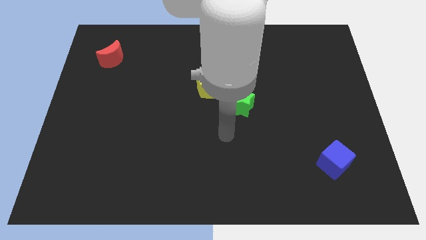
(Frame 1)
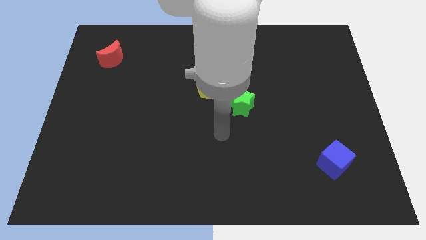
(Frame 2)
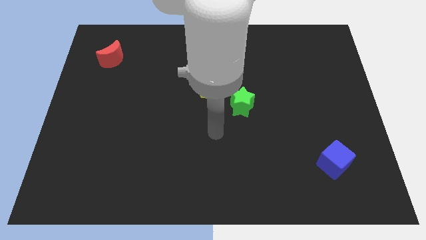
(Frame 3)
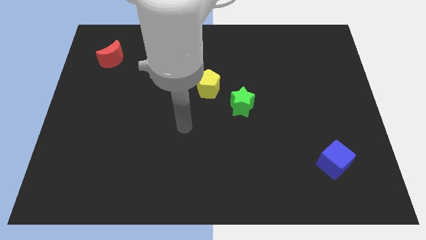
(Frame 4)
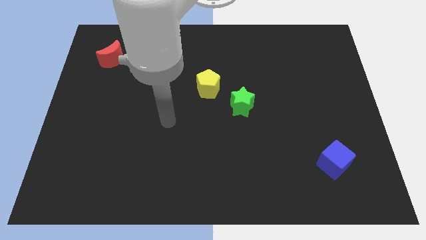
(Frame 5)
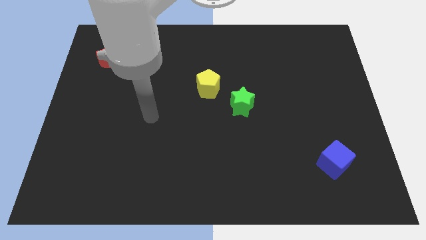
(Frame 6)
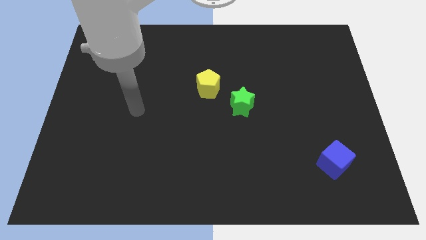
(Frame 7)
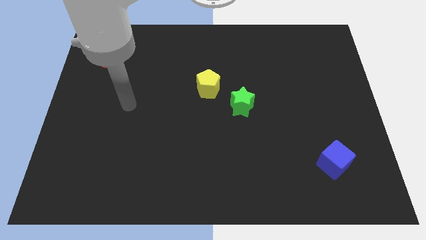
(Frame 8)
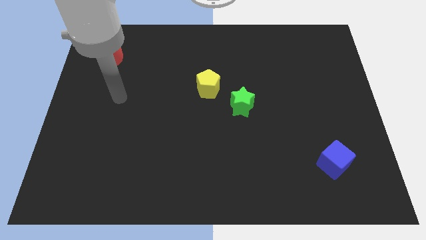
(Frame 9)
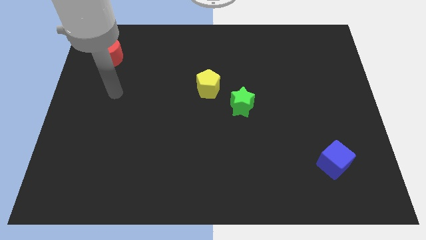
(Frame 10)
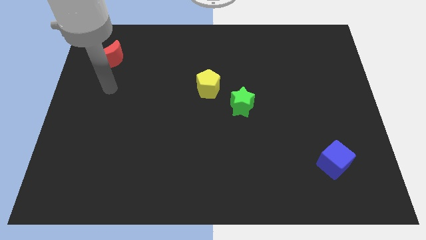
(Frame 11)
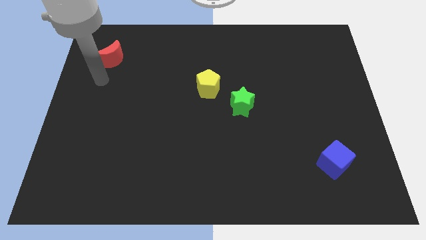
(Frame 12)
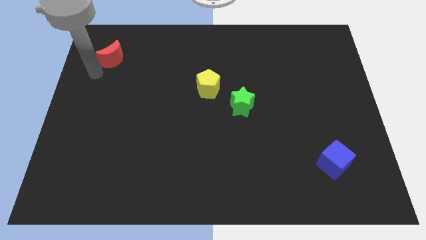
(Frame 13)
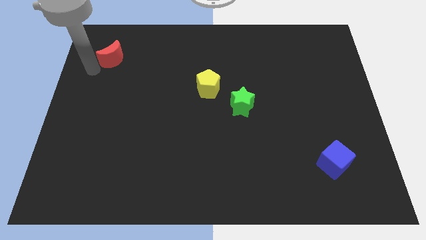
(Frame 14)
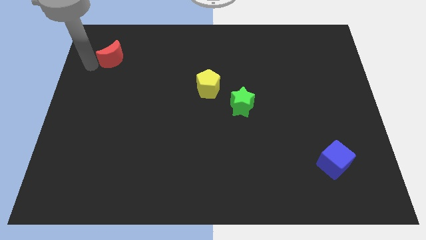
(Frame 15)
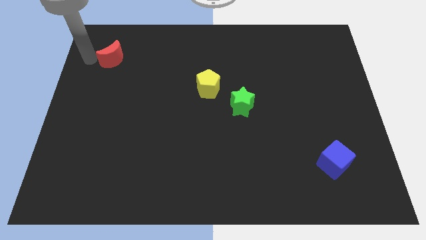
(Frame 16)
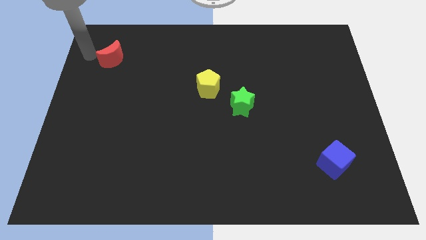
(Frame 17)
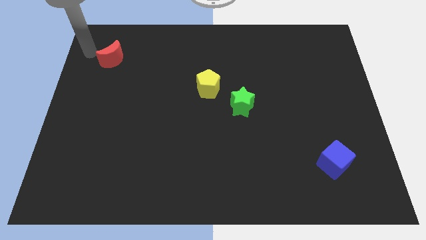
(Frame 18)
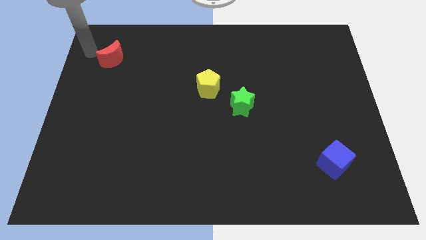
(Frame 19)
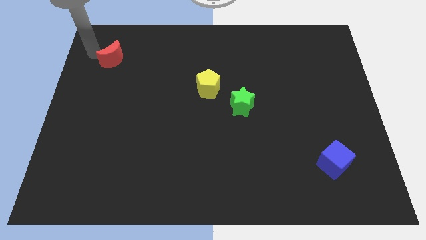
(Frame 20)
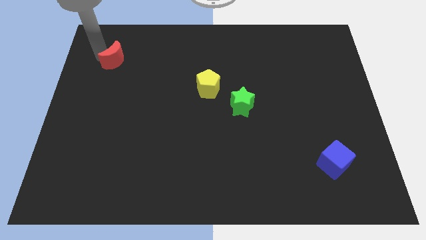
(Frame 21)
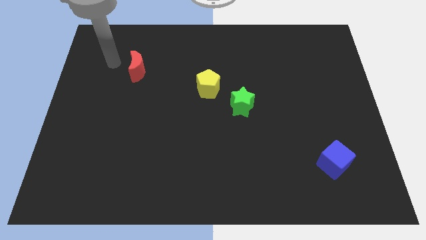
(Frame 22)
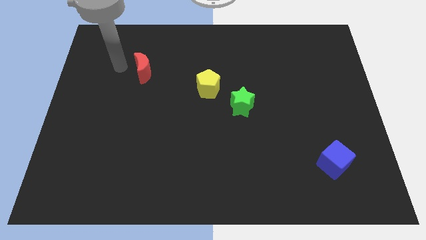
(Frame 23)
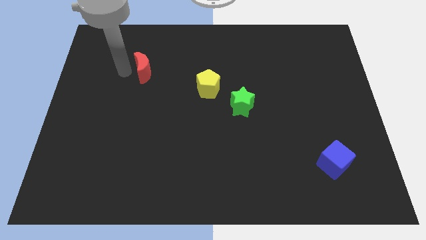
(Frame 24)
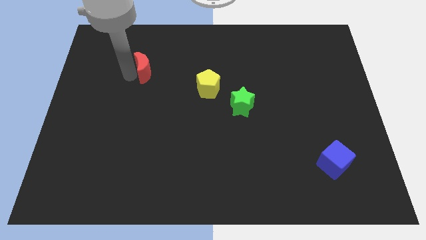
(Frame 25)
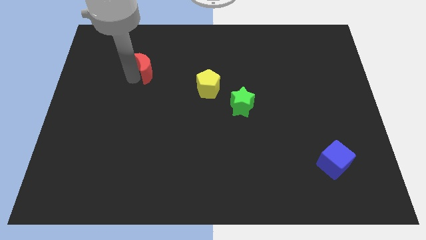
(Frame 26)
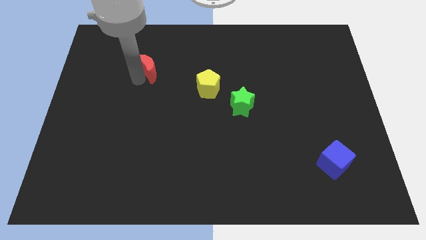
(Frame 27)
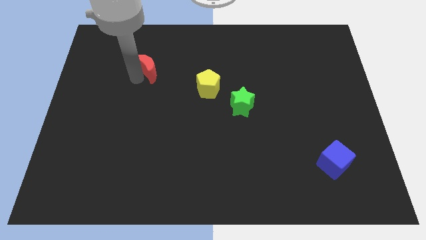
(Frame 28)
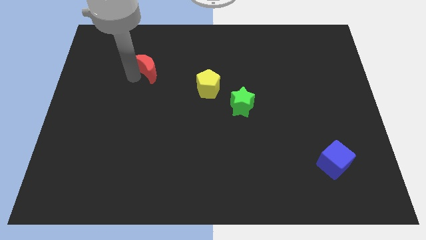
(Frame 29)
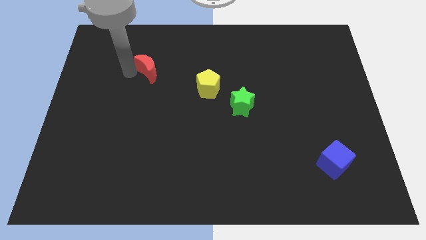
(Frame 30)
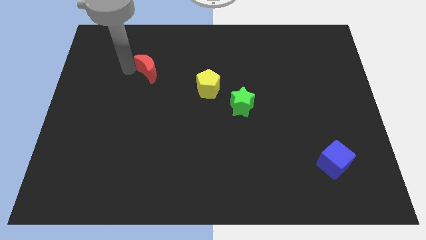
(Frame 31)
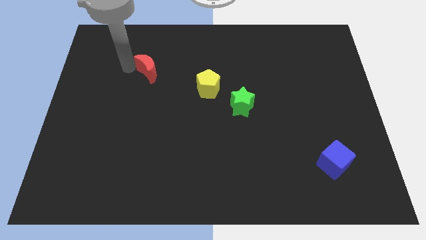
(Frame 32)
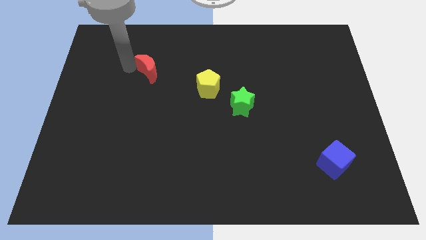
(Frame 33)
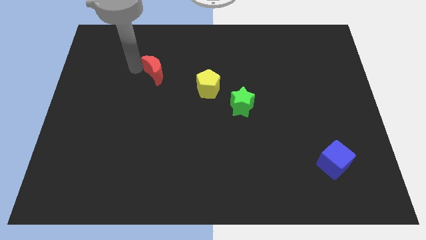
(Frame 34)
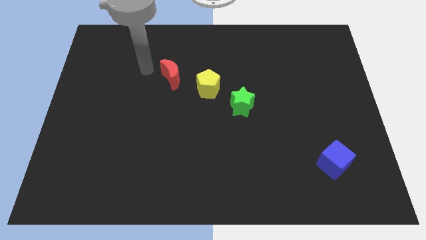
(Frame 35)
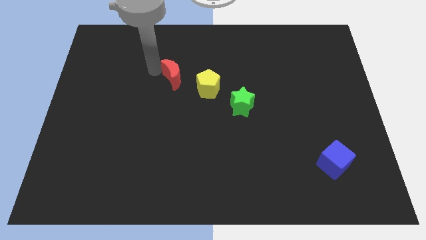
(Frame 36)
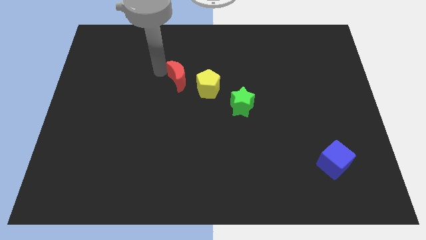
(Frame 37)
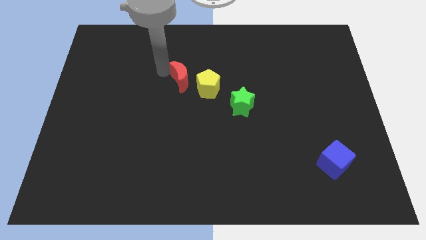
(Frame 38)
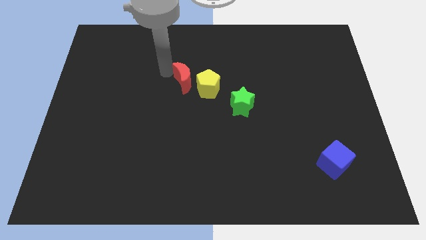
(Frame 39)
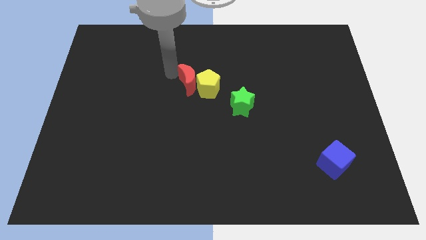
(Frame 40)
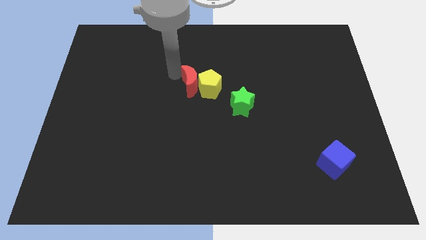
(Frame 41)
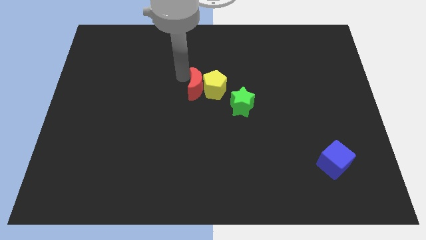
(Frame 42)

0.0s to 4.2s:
move the red block to the pentagon

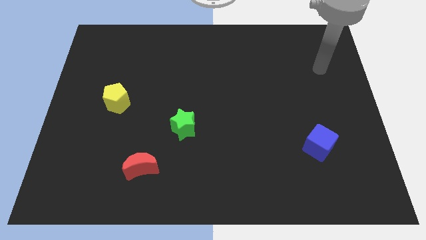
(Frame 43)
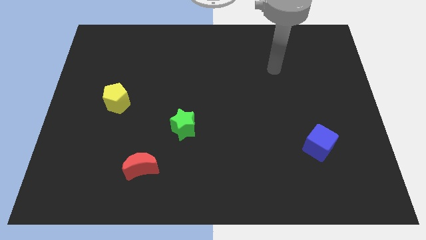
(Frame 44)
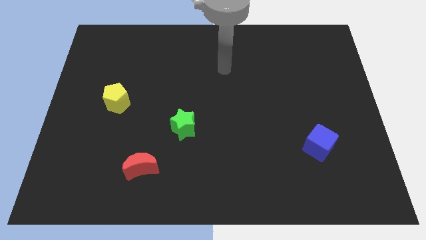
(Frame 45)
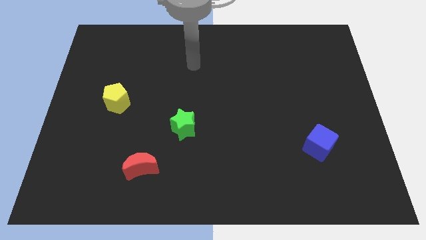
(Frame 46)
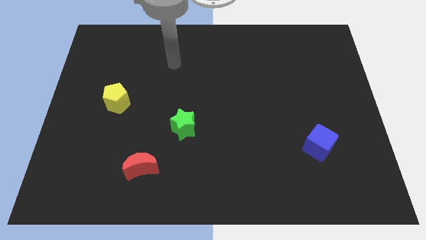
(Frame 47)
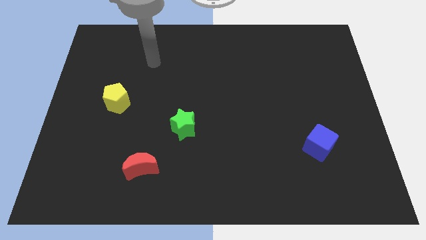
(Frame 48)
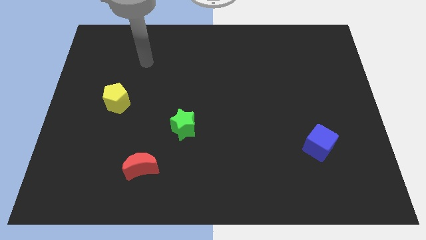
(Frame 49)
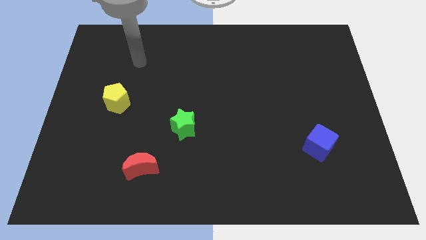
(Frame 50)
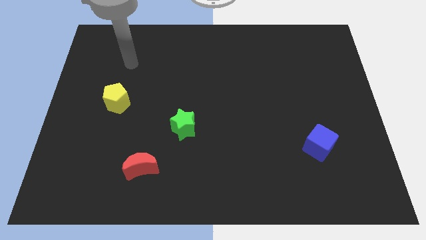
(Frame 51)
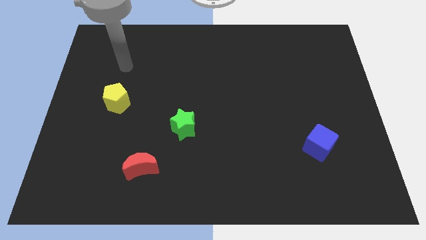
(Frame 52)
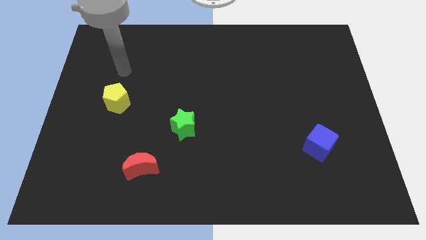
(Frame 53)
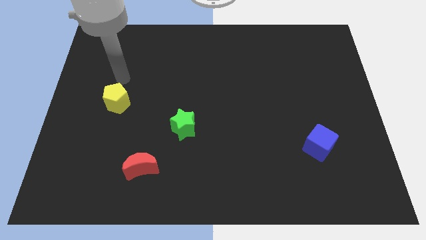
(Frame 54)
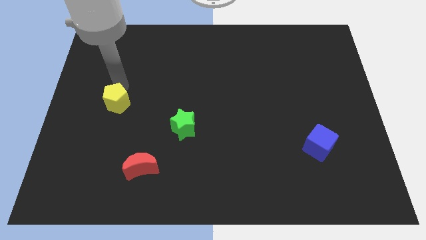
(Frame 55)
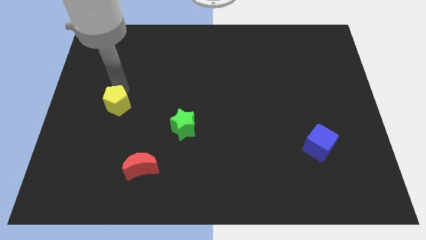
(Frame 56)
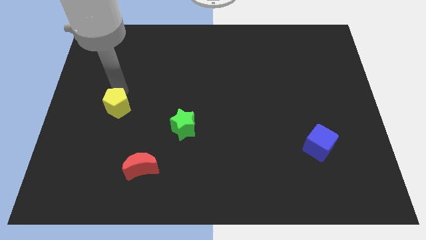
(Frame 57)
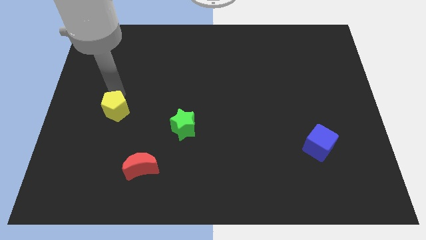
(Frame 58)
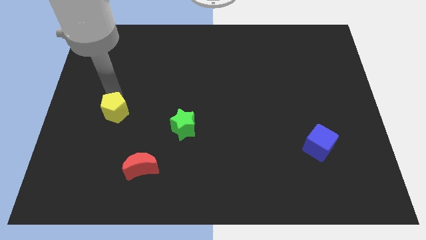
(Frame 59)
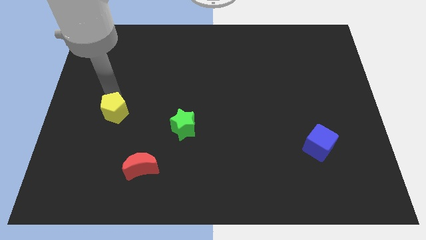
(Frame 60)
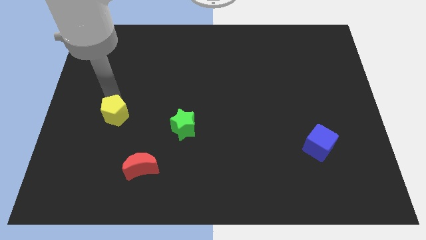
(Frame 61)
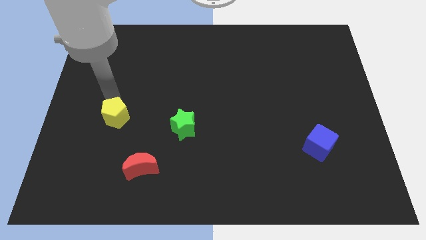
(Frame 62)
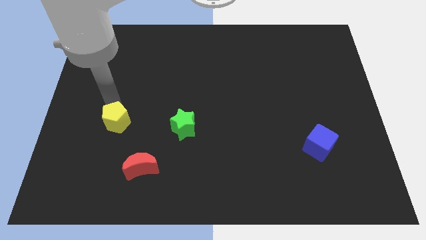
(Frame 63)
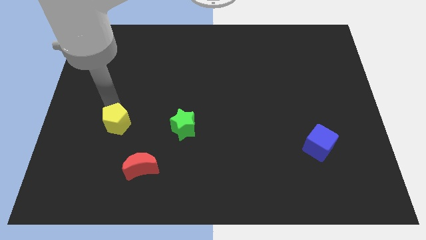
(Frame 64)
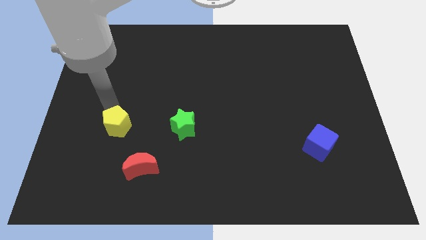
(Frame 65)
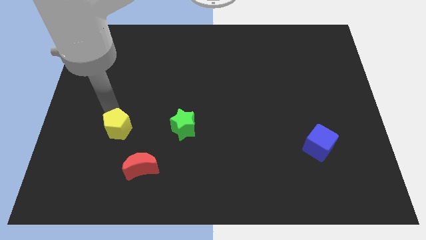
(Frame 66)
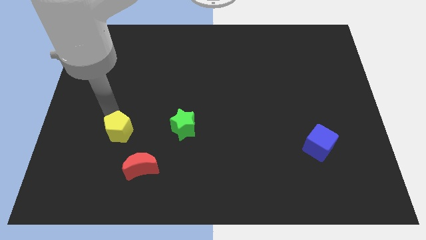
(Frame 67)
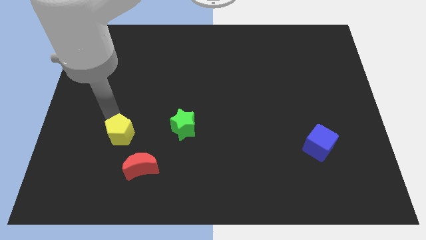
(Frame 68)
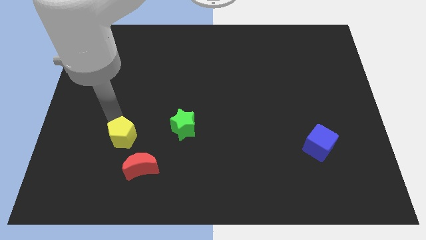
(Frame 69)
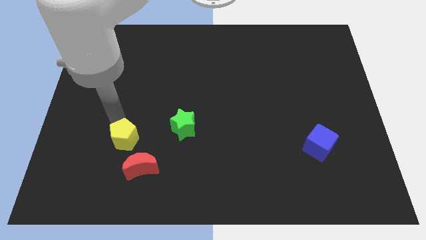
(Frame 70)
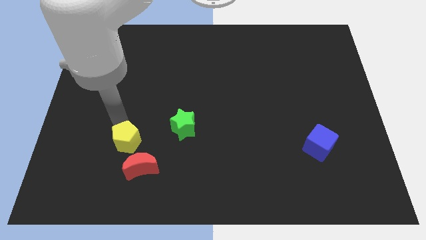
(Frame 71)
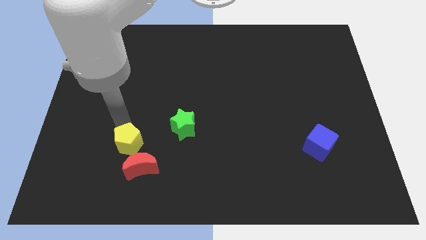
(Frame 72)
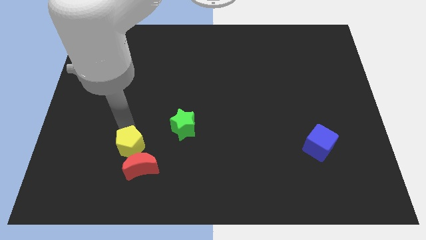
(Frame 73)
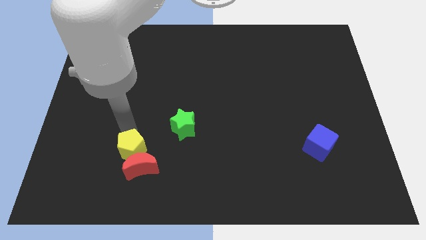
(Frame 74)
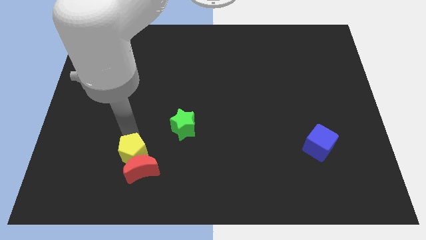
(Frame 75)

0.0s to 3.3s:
push the yellow block to the red moon

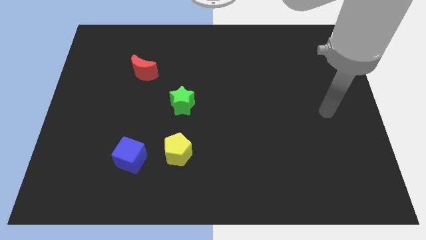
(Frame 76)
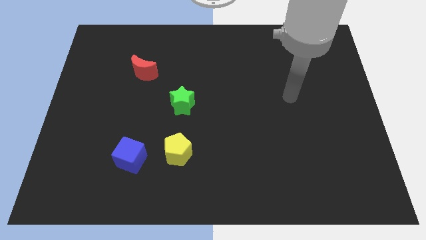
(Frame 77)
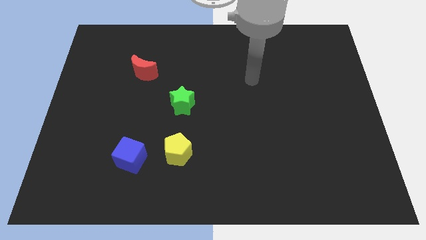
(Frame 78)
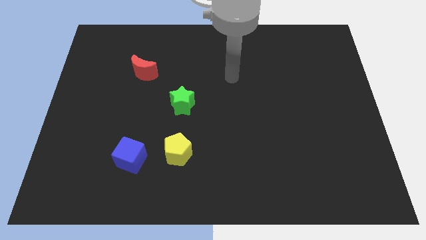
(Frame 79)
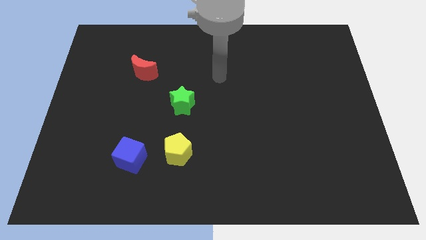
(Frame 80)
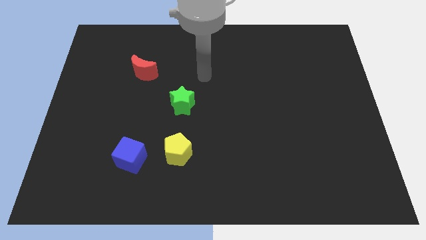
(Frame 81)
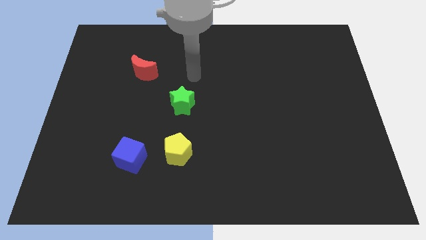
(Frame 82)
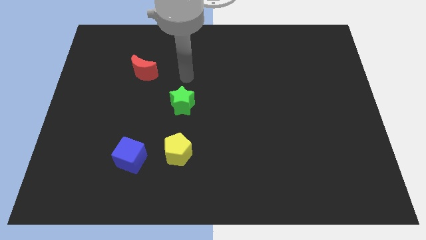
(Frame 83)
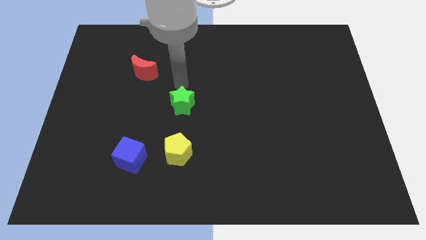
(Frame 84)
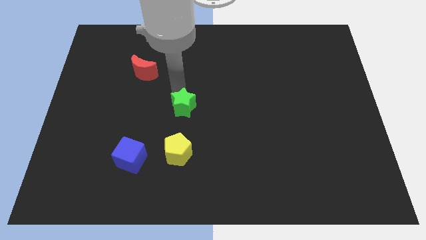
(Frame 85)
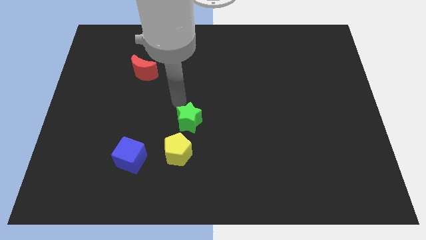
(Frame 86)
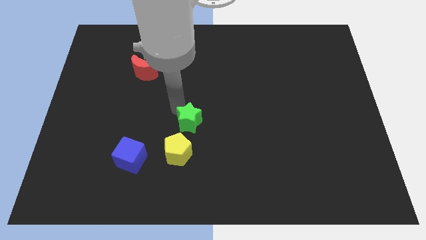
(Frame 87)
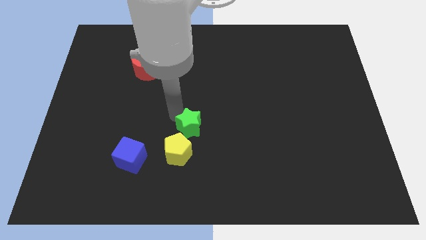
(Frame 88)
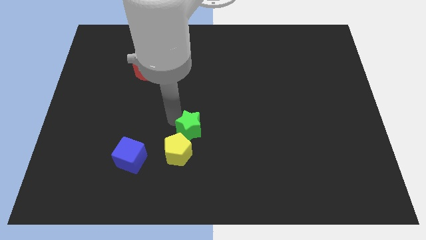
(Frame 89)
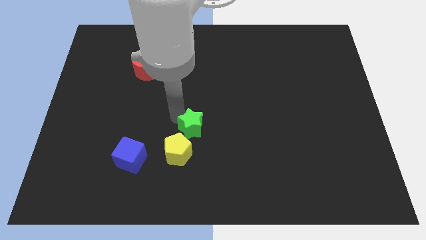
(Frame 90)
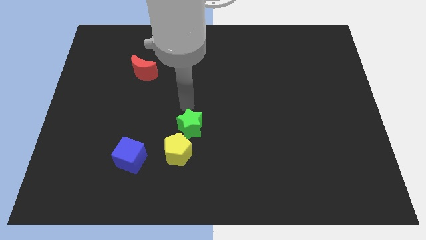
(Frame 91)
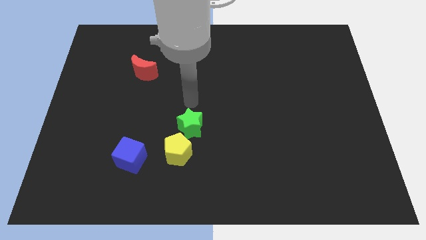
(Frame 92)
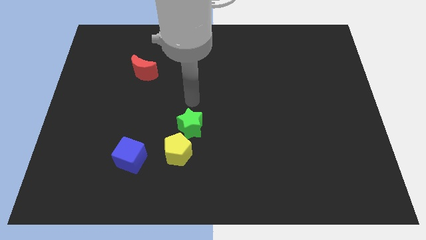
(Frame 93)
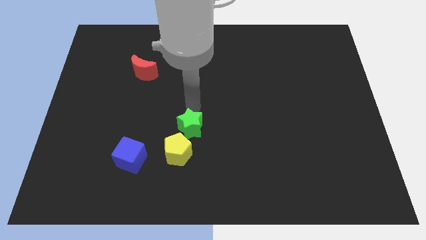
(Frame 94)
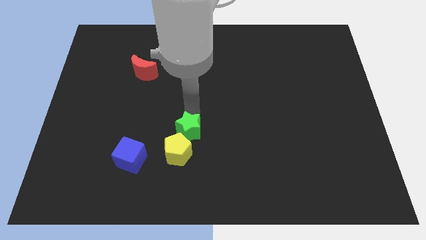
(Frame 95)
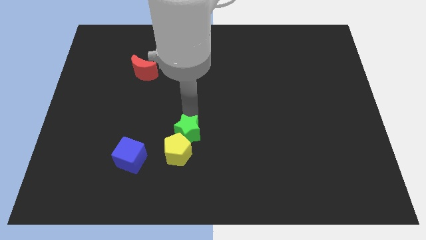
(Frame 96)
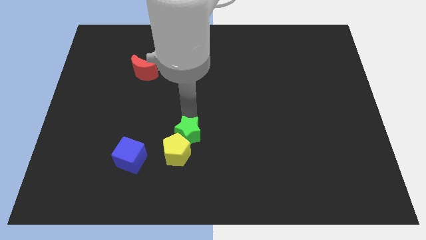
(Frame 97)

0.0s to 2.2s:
push the green block to the yellow pentagon
